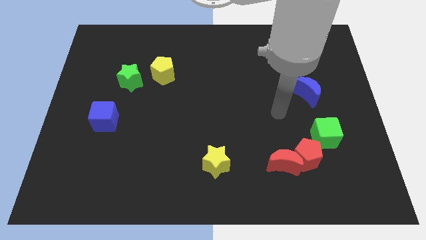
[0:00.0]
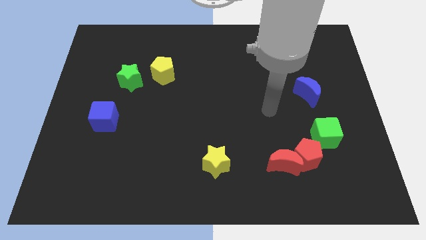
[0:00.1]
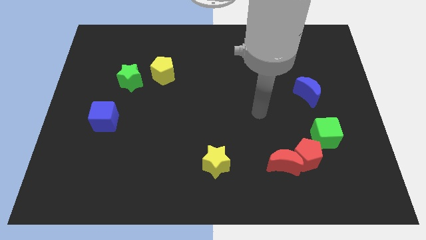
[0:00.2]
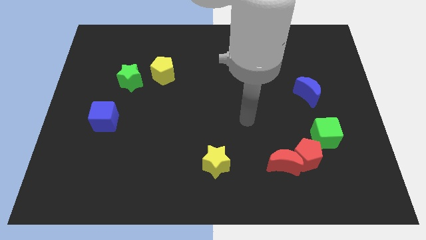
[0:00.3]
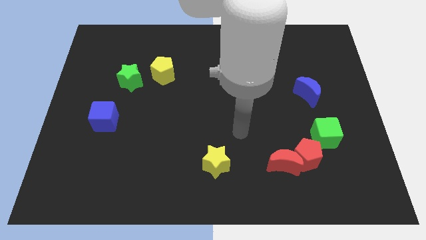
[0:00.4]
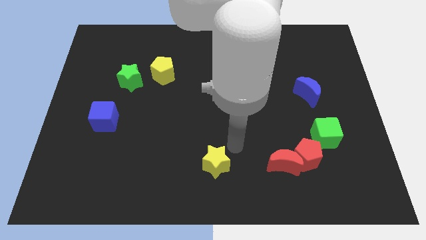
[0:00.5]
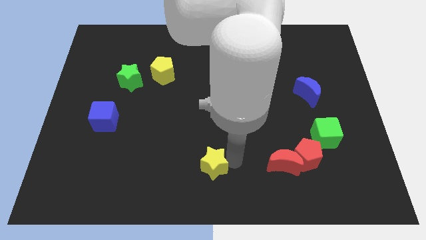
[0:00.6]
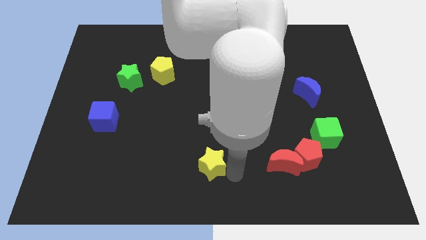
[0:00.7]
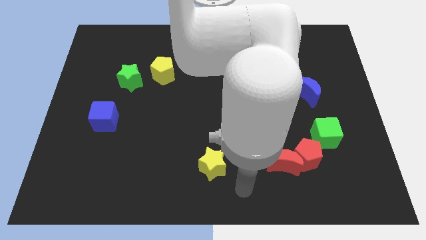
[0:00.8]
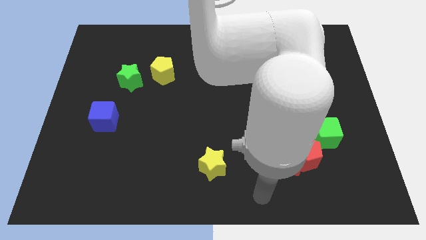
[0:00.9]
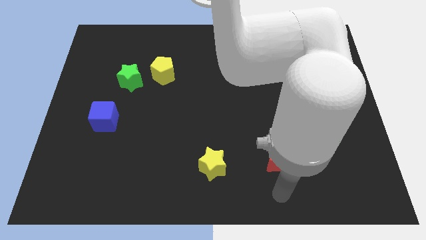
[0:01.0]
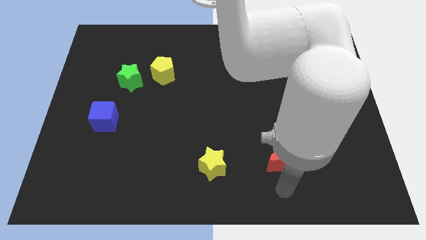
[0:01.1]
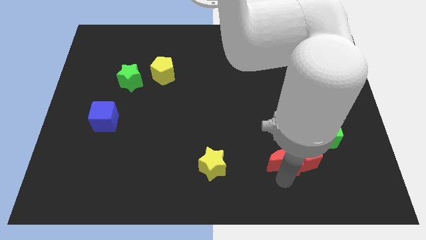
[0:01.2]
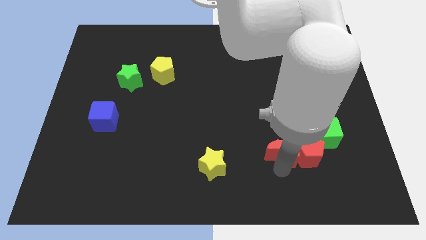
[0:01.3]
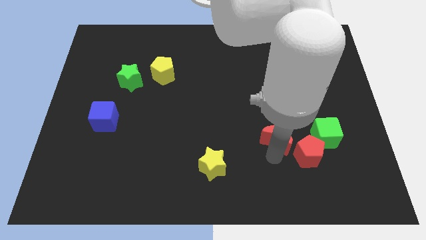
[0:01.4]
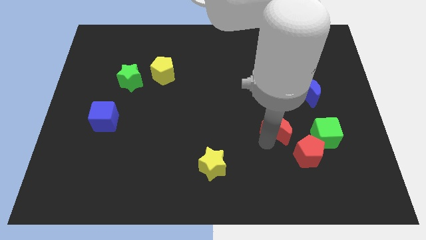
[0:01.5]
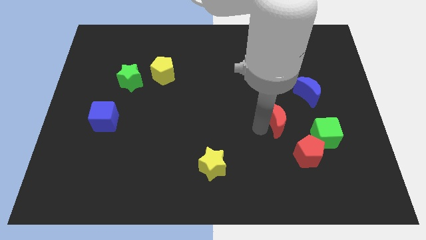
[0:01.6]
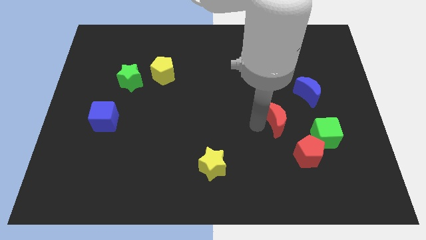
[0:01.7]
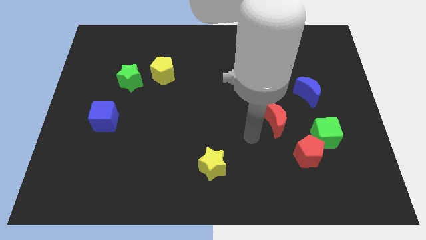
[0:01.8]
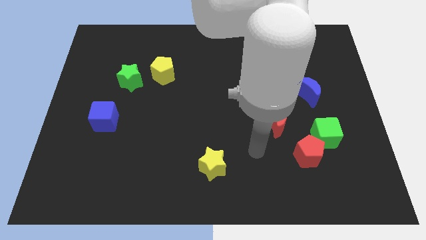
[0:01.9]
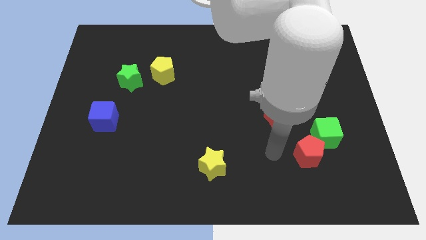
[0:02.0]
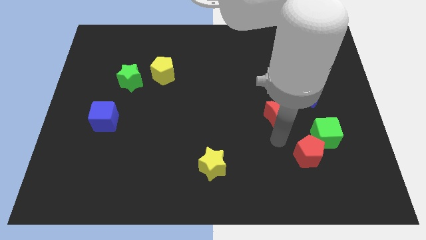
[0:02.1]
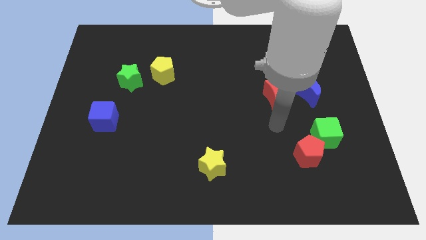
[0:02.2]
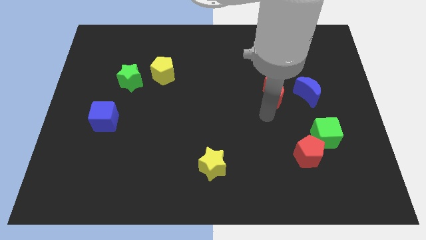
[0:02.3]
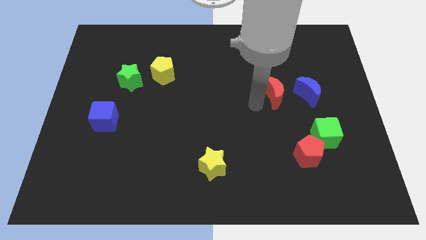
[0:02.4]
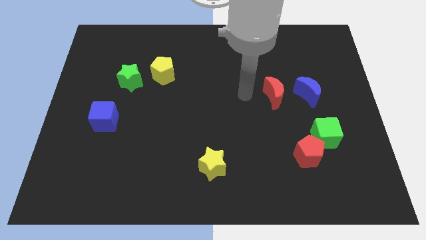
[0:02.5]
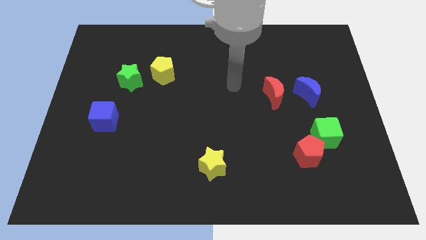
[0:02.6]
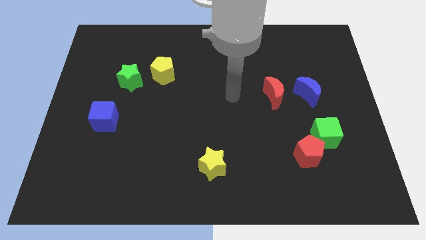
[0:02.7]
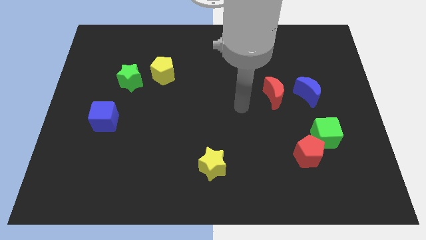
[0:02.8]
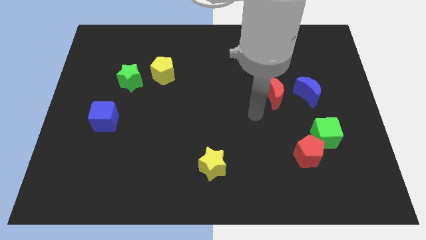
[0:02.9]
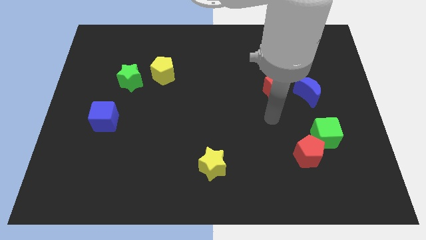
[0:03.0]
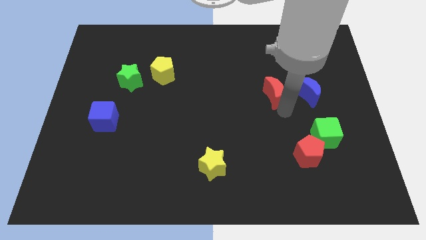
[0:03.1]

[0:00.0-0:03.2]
push the red crescent to the left of the blue crescent

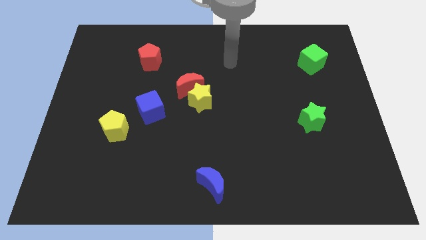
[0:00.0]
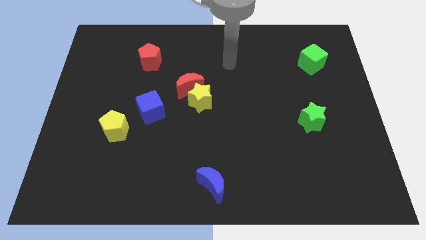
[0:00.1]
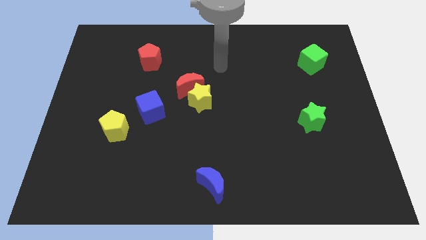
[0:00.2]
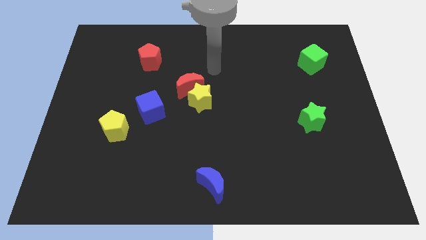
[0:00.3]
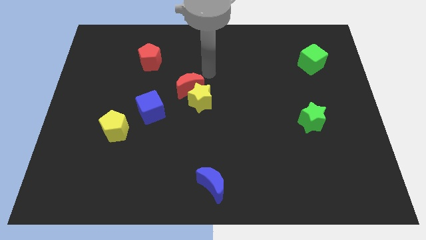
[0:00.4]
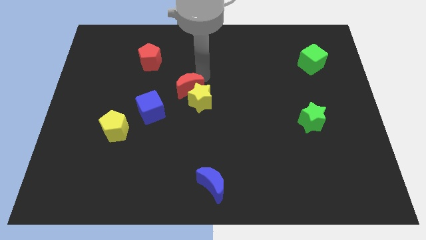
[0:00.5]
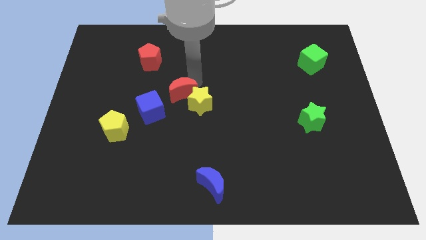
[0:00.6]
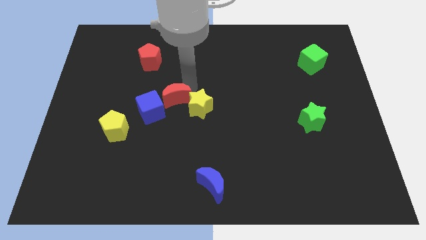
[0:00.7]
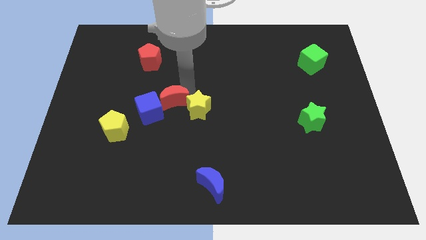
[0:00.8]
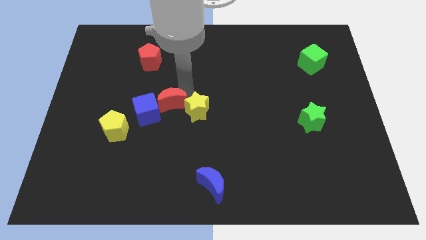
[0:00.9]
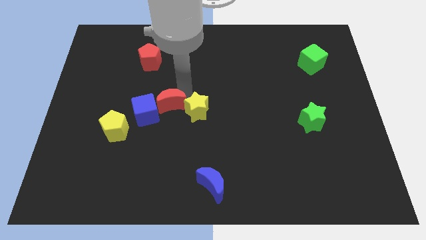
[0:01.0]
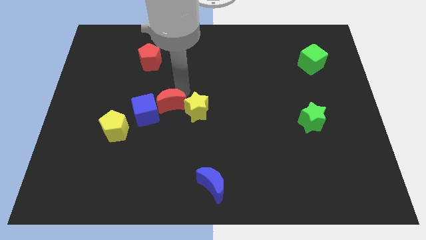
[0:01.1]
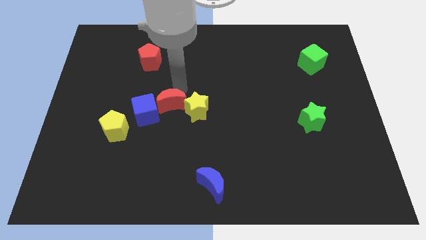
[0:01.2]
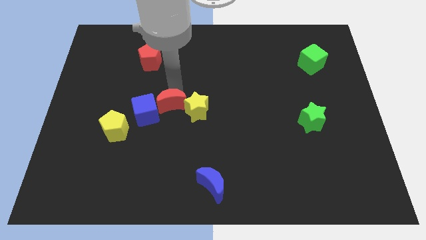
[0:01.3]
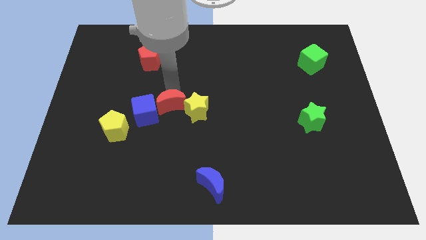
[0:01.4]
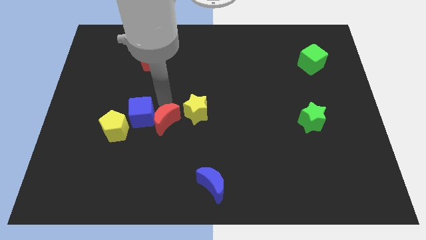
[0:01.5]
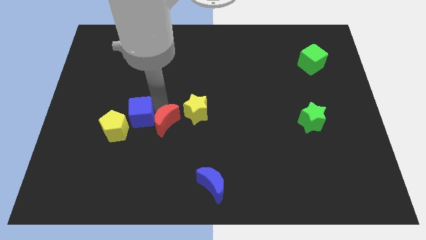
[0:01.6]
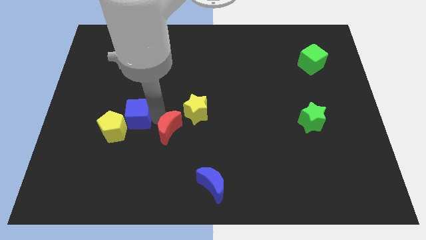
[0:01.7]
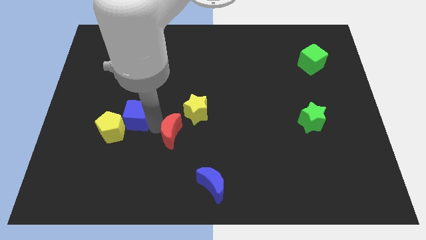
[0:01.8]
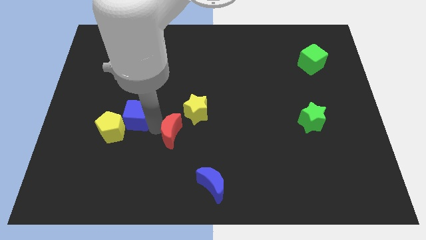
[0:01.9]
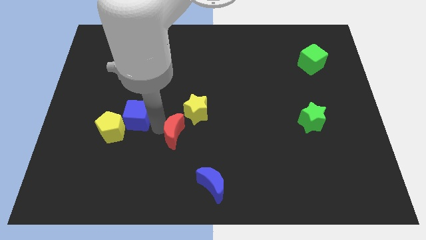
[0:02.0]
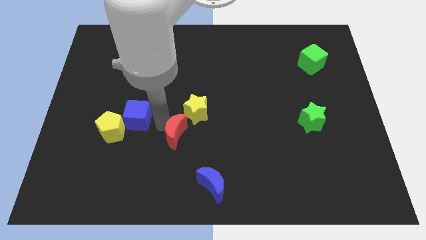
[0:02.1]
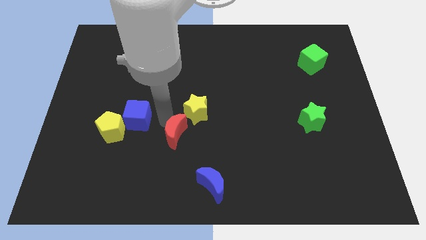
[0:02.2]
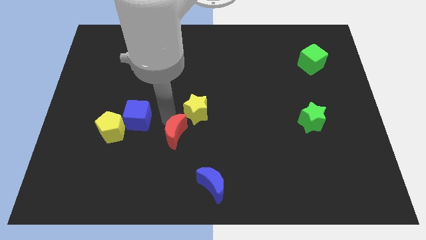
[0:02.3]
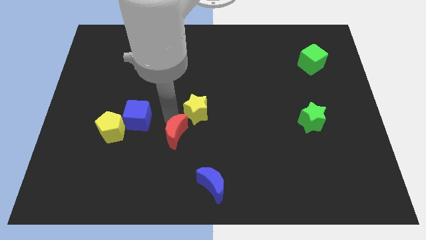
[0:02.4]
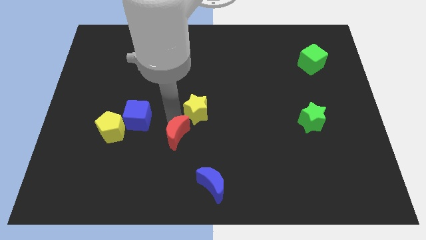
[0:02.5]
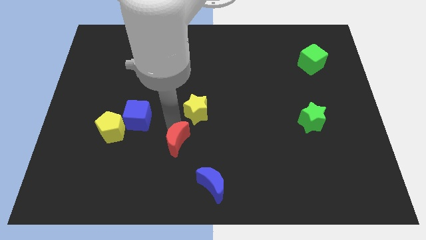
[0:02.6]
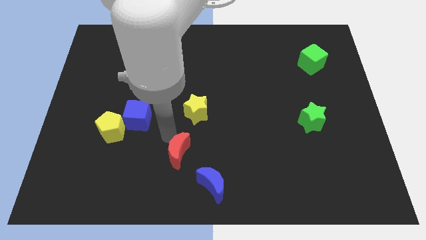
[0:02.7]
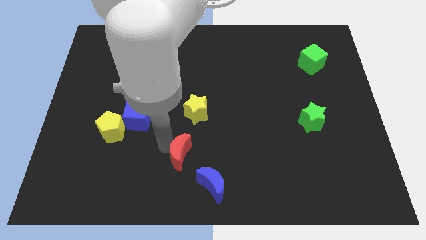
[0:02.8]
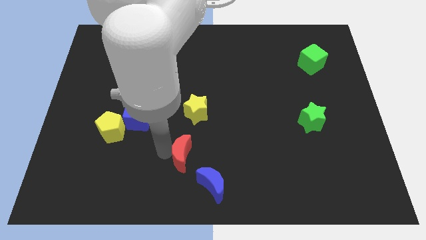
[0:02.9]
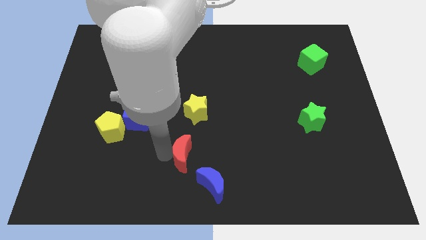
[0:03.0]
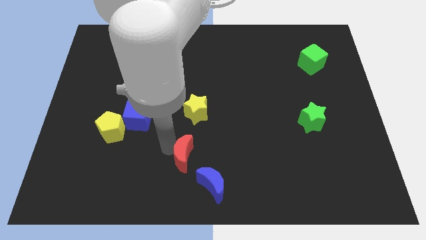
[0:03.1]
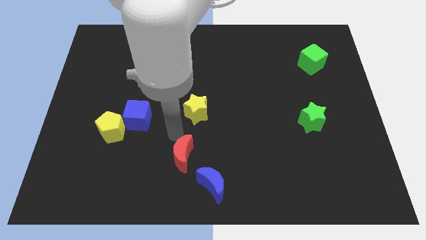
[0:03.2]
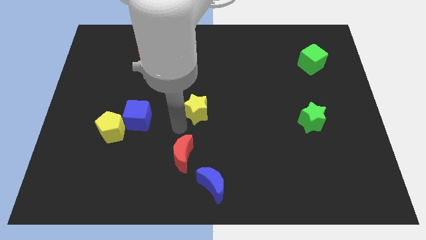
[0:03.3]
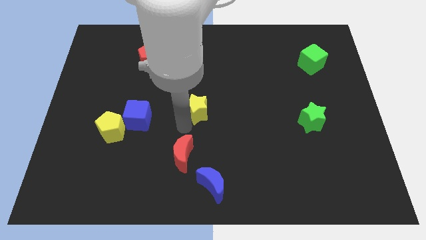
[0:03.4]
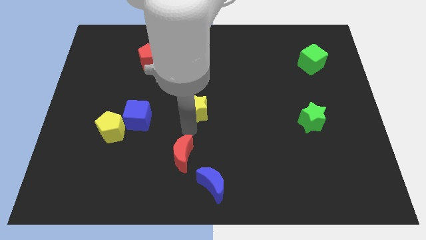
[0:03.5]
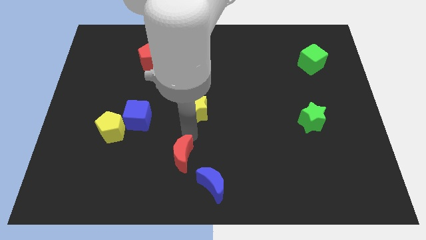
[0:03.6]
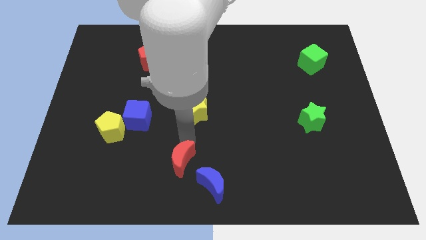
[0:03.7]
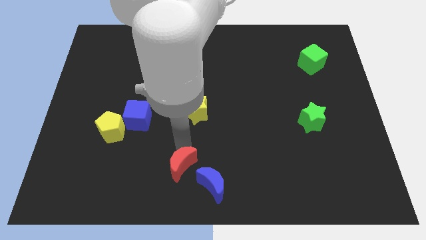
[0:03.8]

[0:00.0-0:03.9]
push the red crescent towards the blue crescent

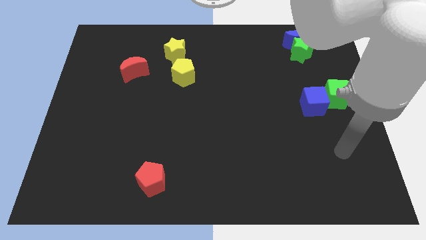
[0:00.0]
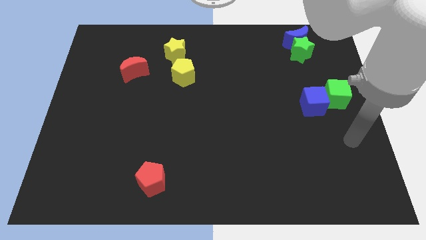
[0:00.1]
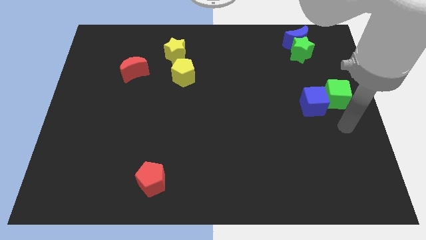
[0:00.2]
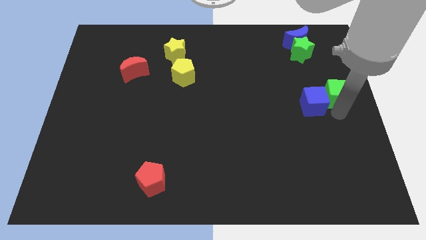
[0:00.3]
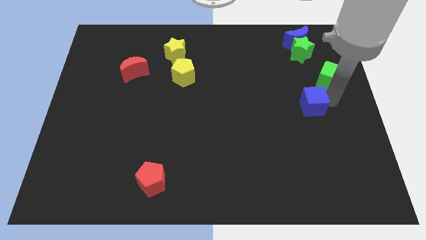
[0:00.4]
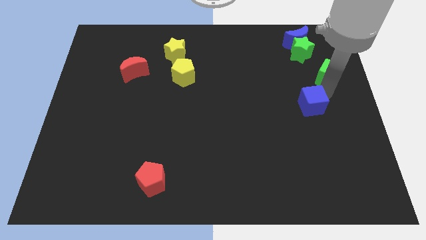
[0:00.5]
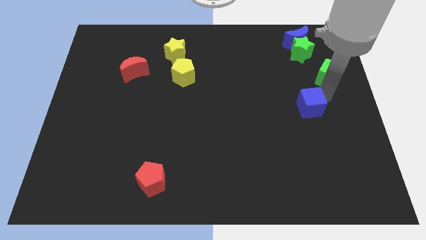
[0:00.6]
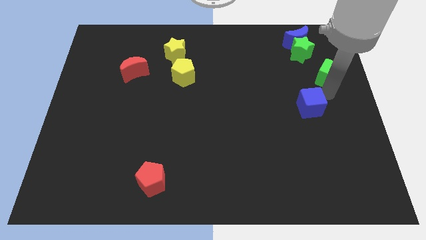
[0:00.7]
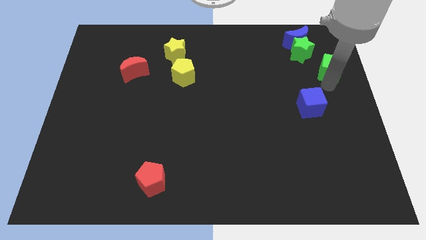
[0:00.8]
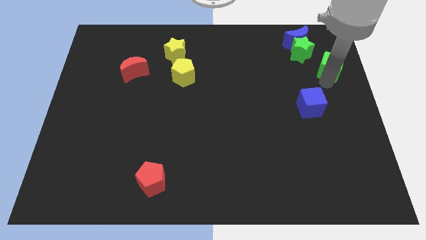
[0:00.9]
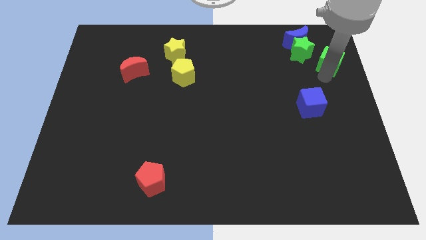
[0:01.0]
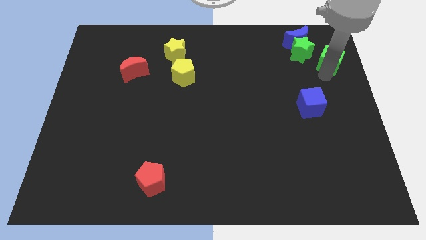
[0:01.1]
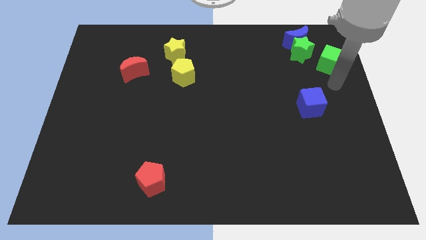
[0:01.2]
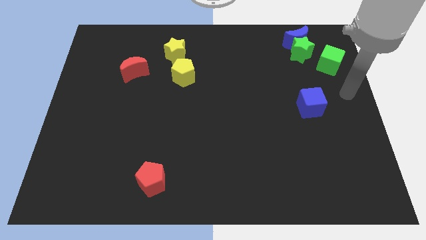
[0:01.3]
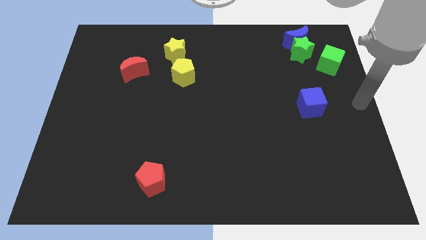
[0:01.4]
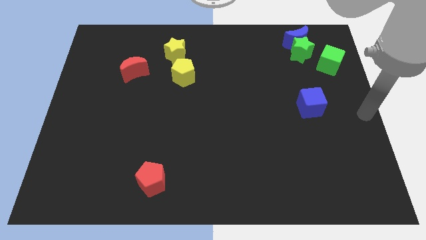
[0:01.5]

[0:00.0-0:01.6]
push the green cube to the right side of the green star
